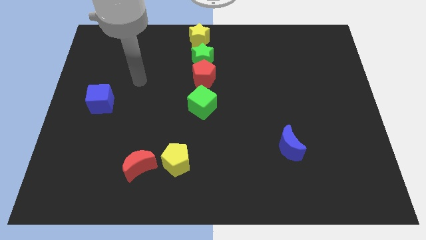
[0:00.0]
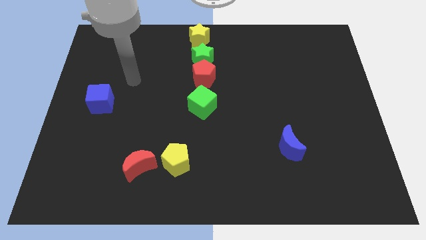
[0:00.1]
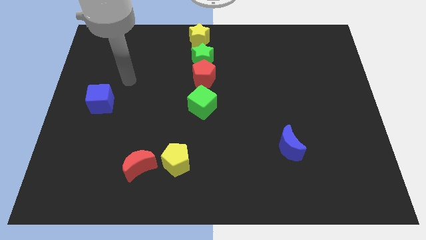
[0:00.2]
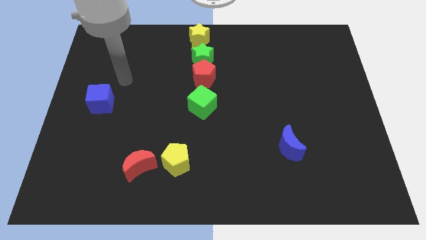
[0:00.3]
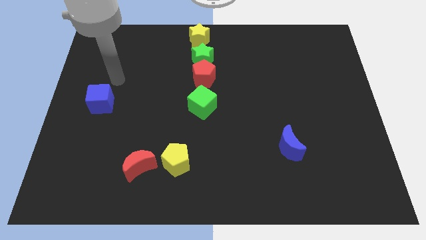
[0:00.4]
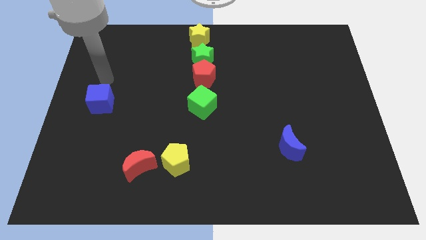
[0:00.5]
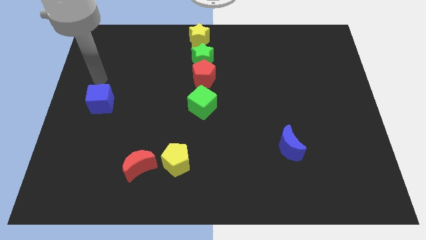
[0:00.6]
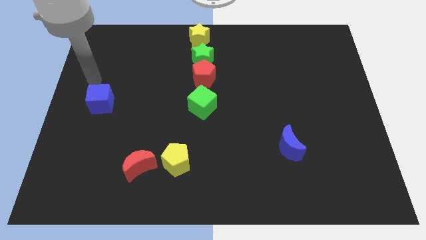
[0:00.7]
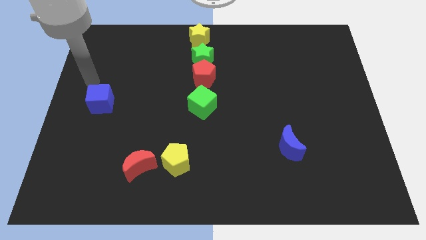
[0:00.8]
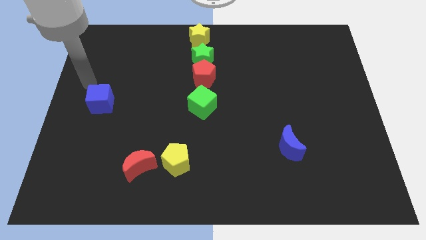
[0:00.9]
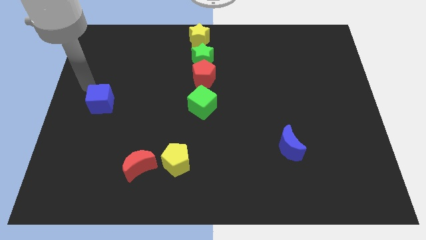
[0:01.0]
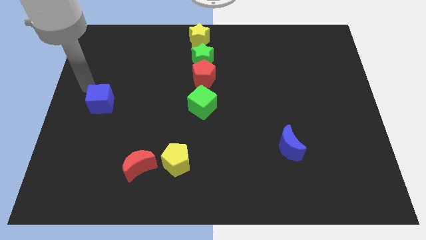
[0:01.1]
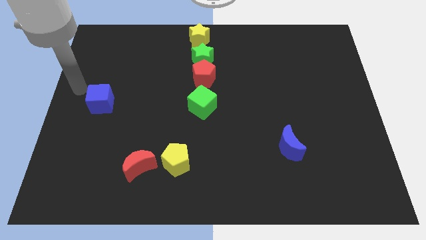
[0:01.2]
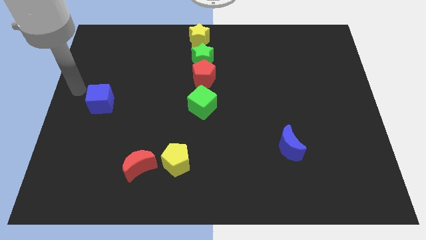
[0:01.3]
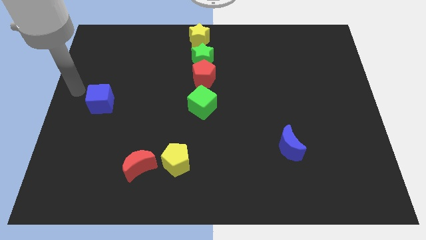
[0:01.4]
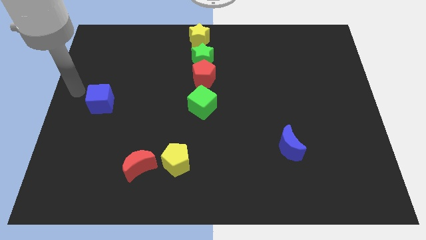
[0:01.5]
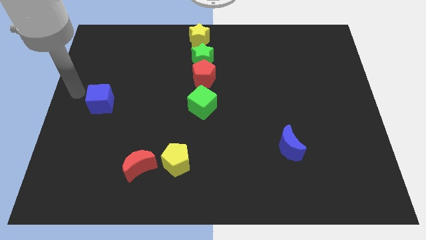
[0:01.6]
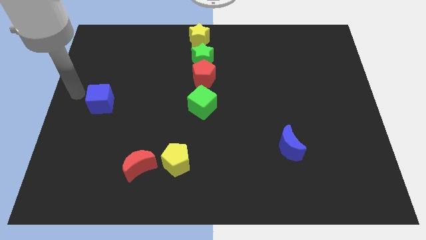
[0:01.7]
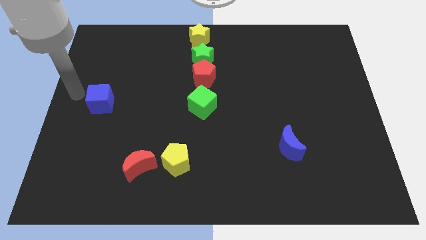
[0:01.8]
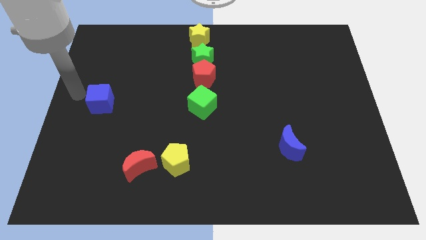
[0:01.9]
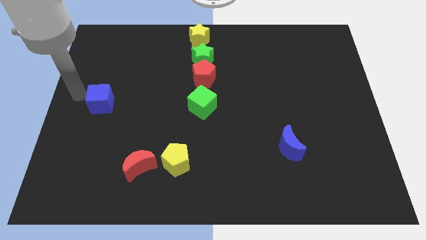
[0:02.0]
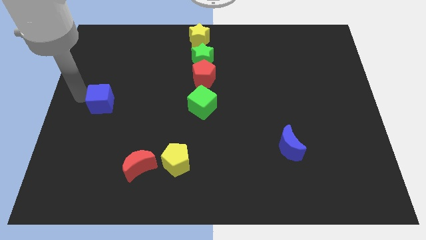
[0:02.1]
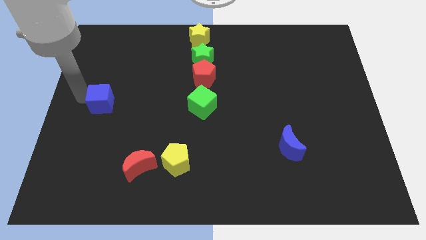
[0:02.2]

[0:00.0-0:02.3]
place your arm to the left side of blue cube

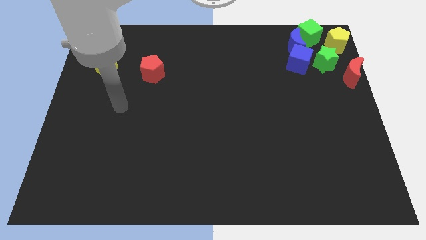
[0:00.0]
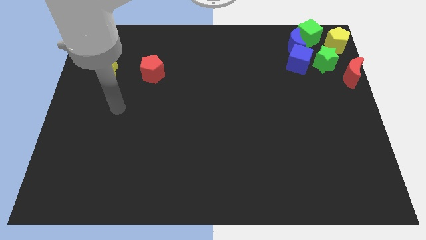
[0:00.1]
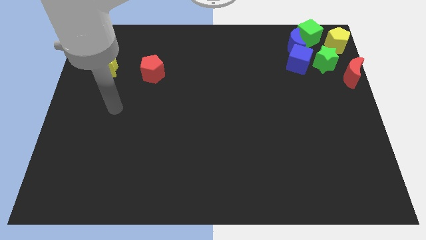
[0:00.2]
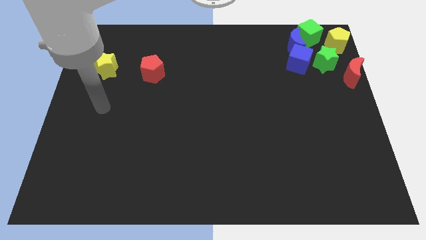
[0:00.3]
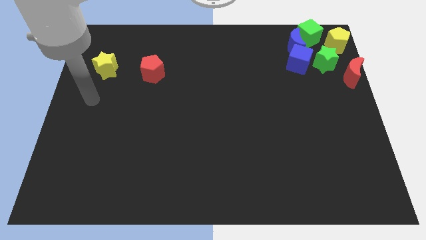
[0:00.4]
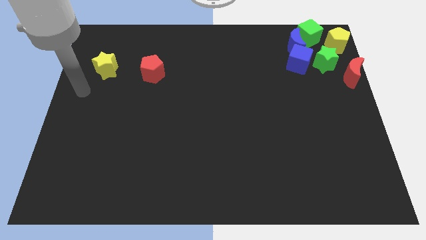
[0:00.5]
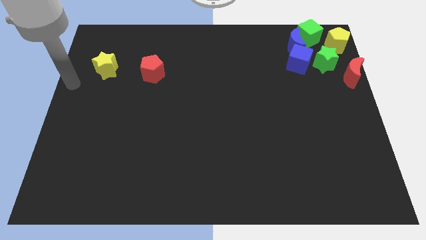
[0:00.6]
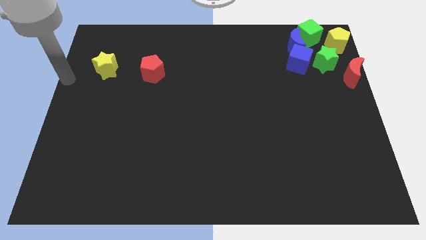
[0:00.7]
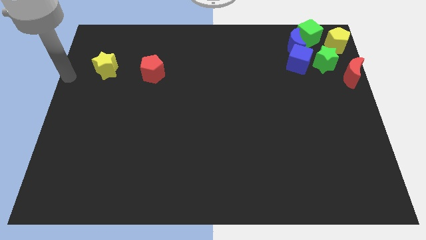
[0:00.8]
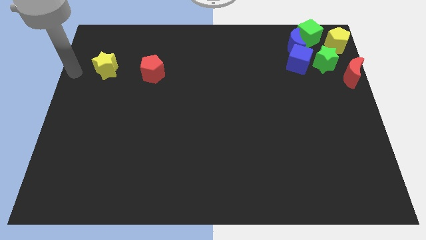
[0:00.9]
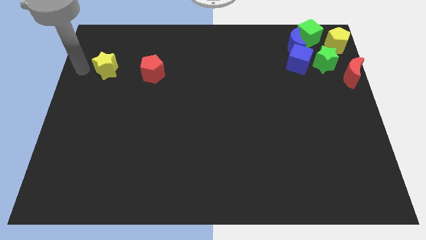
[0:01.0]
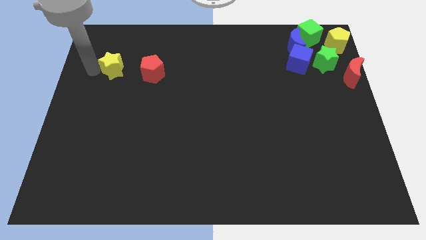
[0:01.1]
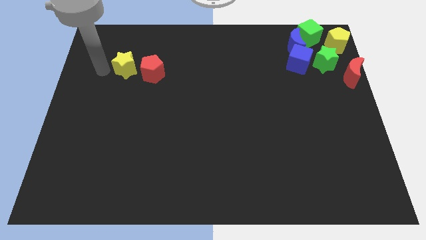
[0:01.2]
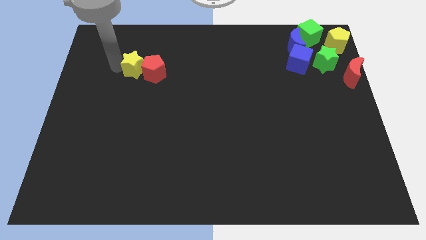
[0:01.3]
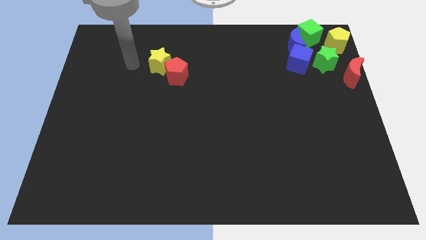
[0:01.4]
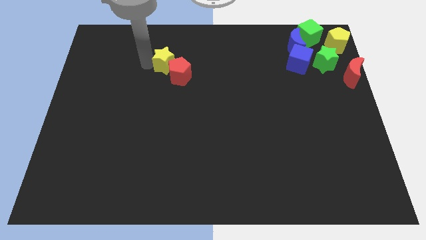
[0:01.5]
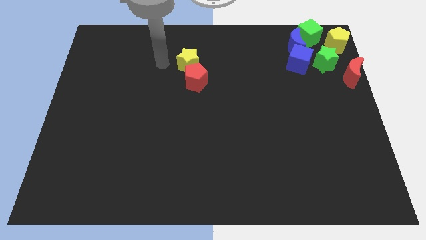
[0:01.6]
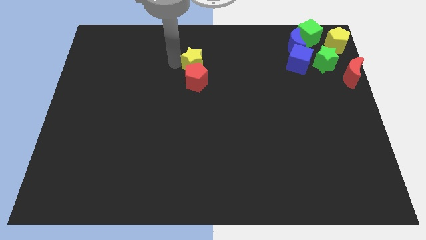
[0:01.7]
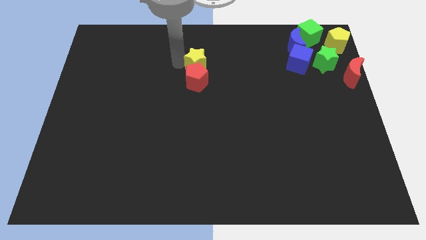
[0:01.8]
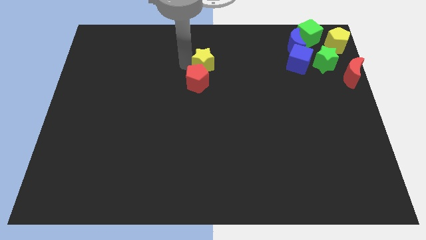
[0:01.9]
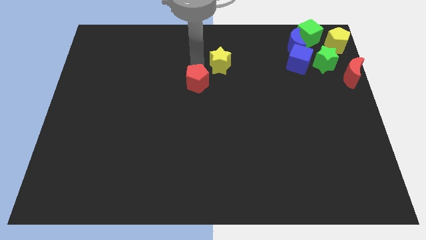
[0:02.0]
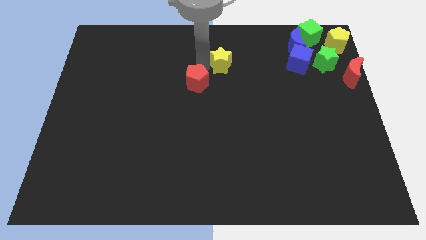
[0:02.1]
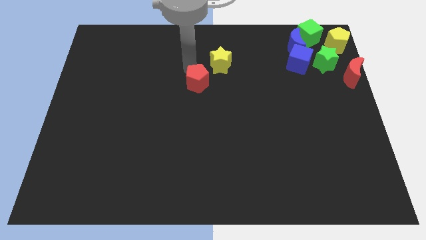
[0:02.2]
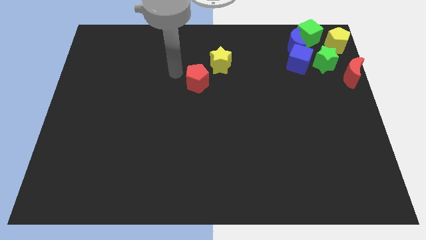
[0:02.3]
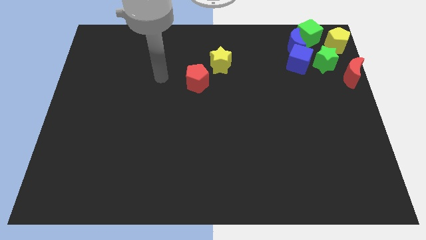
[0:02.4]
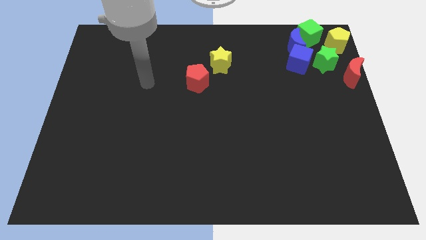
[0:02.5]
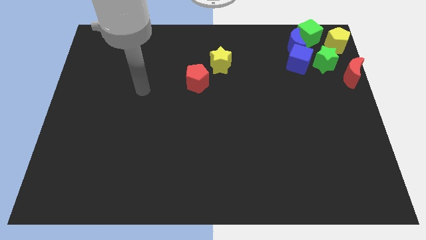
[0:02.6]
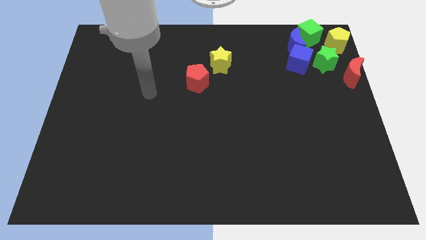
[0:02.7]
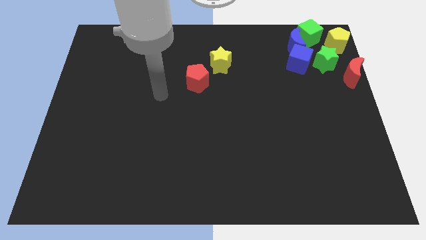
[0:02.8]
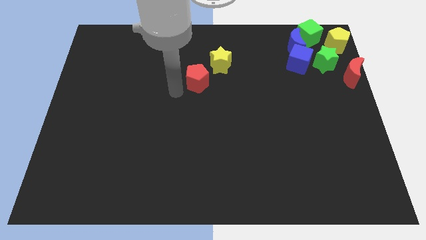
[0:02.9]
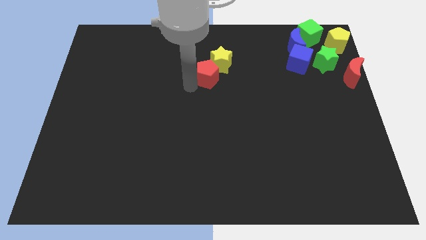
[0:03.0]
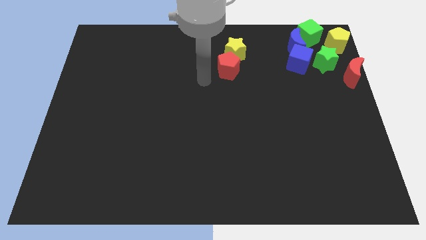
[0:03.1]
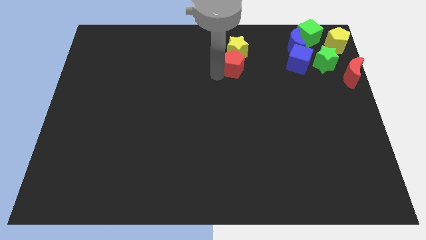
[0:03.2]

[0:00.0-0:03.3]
move the yellow star and red pentagon together to the left of blue blocks

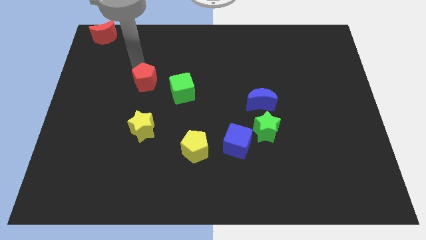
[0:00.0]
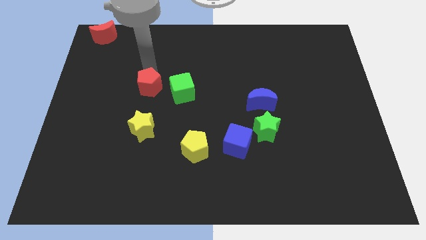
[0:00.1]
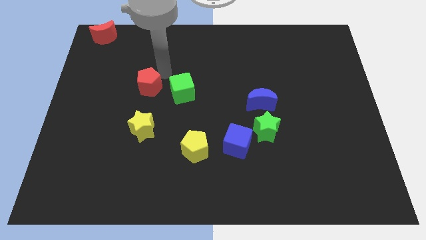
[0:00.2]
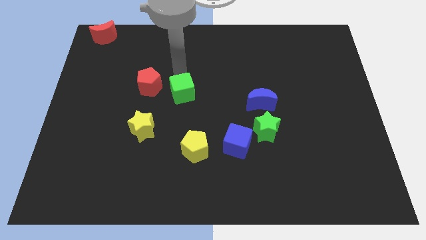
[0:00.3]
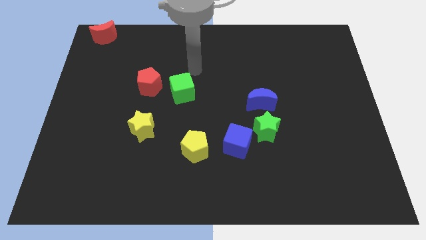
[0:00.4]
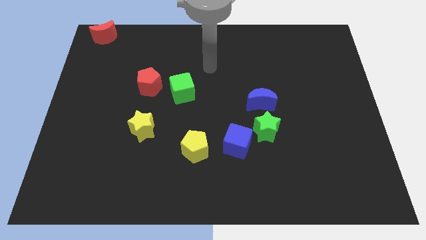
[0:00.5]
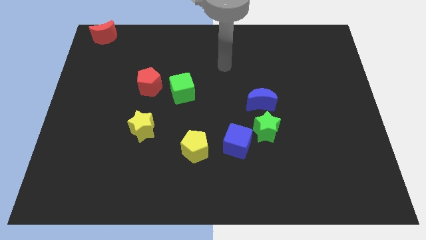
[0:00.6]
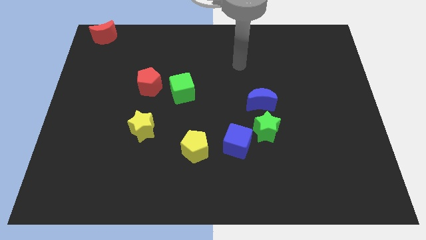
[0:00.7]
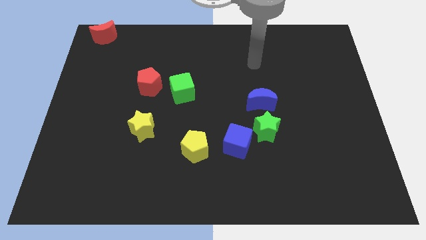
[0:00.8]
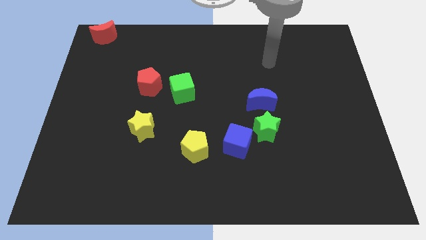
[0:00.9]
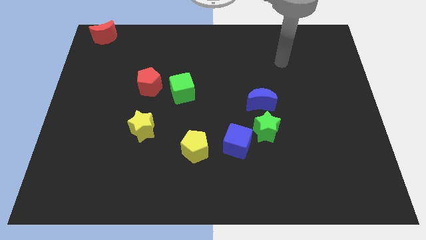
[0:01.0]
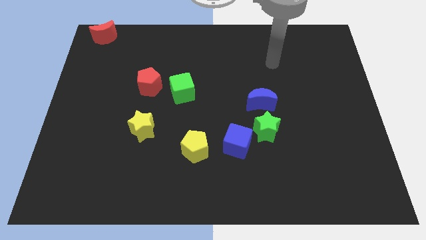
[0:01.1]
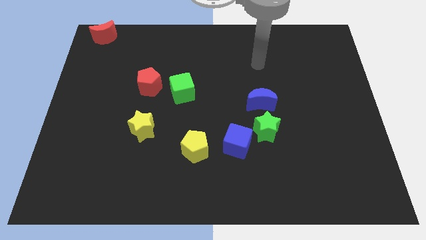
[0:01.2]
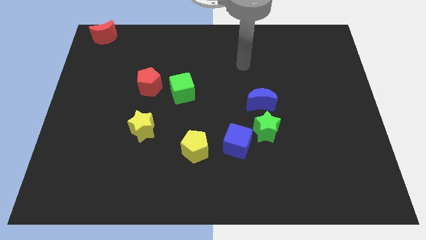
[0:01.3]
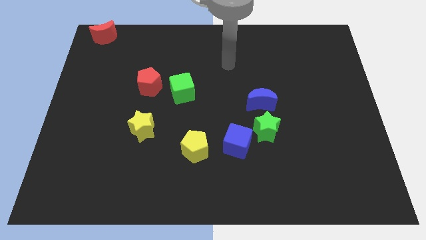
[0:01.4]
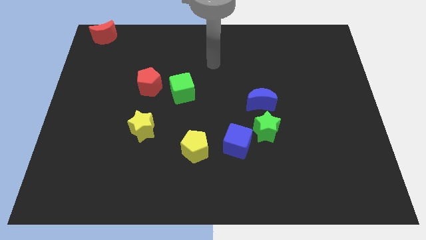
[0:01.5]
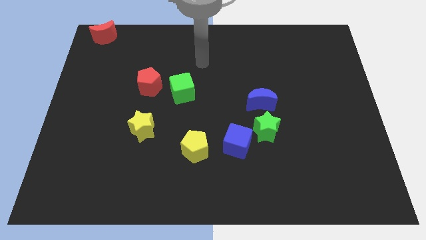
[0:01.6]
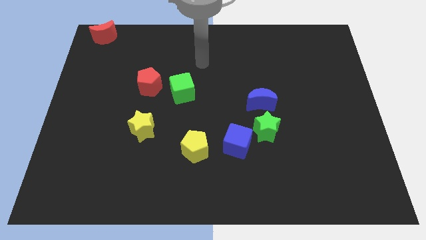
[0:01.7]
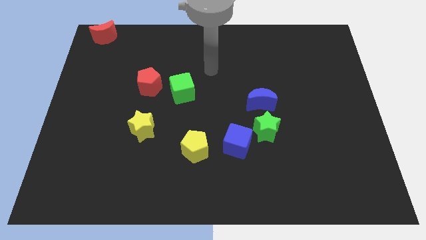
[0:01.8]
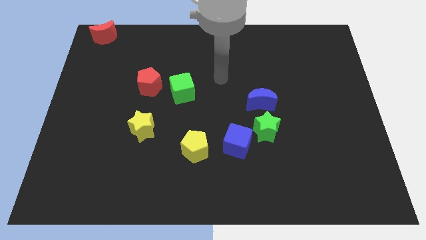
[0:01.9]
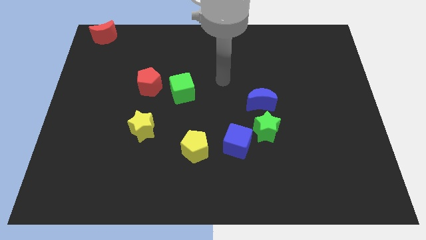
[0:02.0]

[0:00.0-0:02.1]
slightly drag the red pentagon to the top left of green cube

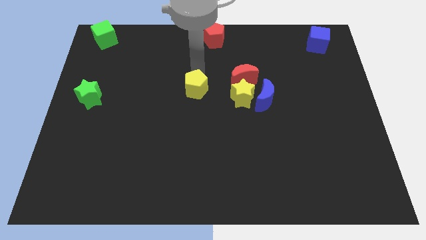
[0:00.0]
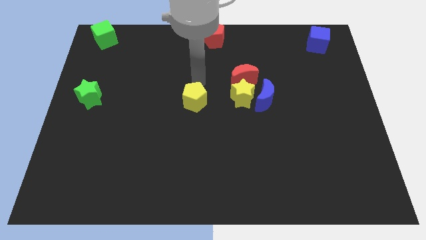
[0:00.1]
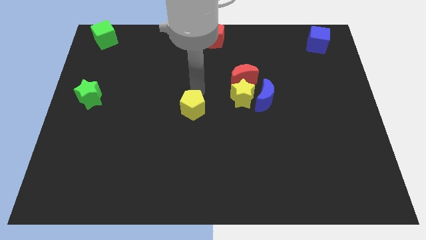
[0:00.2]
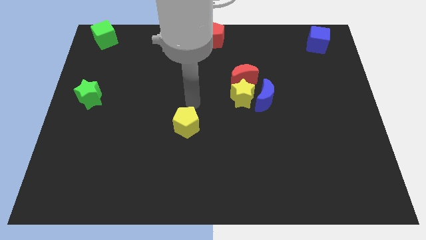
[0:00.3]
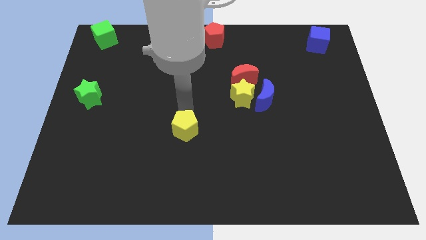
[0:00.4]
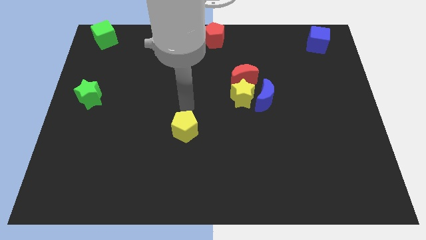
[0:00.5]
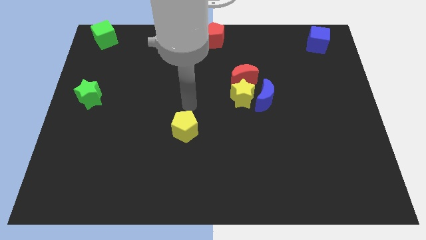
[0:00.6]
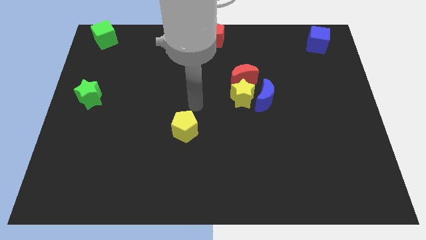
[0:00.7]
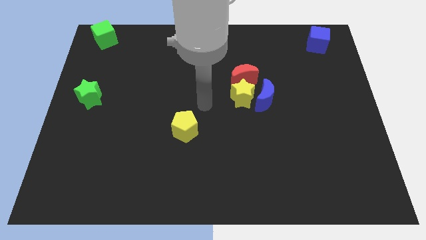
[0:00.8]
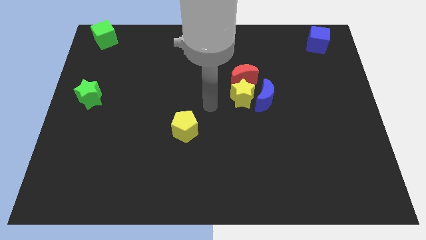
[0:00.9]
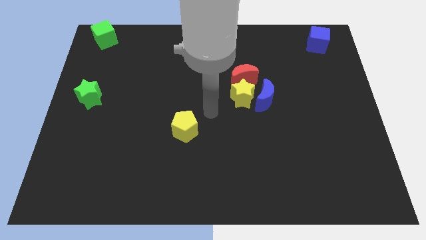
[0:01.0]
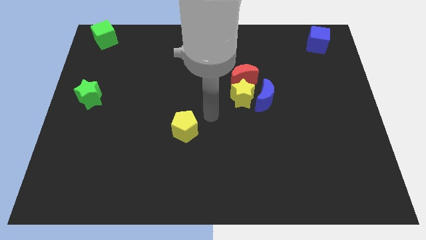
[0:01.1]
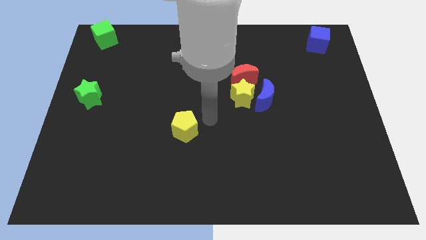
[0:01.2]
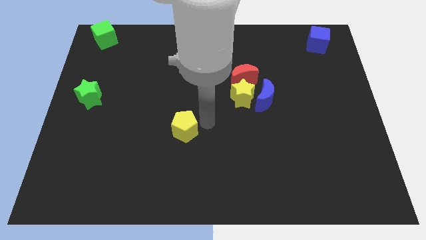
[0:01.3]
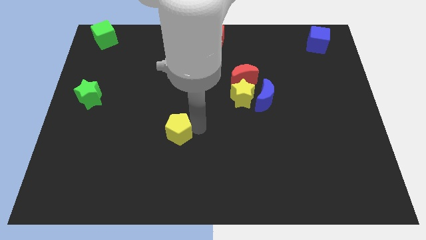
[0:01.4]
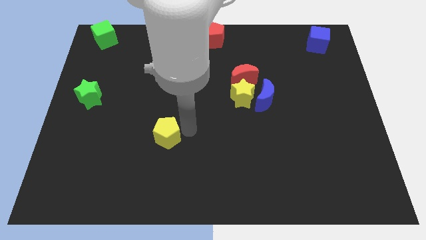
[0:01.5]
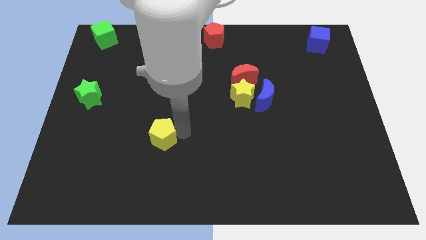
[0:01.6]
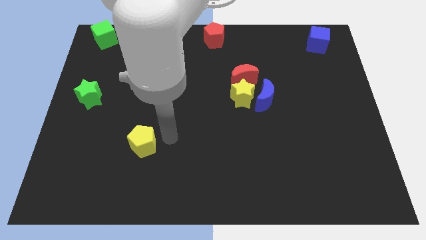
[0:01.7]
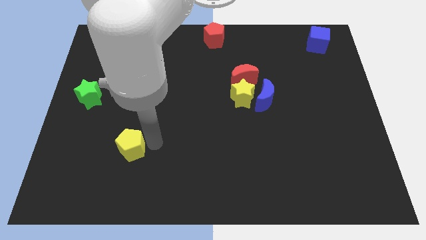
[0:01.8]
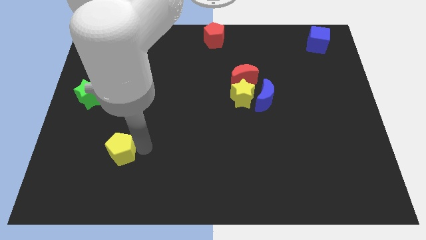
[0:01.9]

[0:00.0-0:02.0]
push the yellow pentagon diagonally below the bottom right side of the green star
